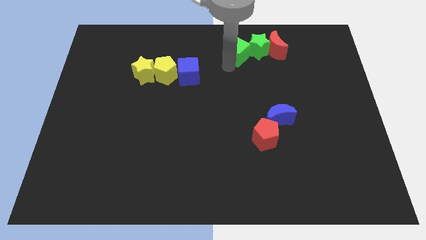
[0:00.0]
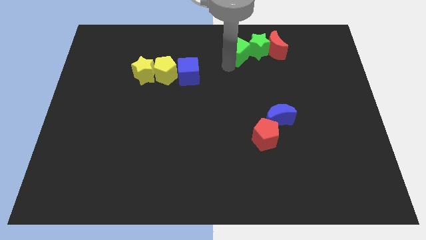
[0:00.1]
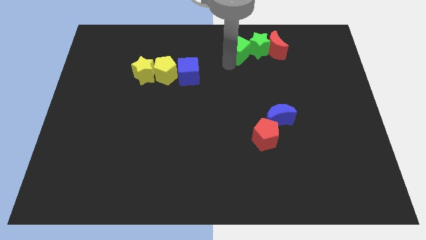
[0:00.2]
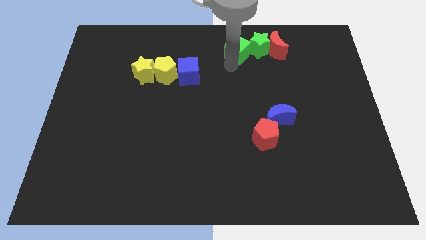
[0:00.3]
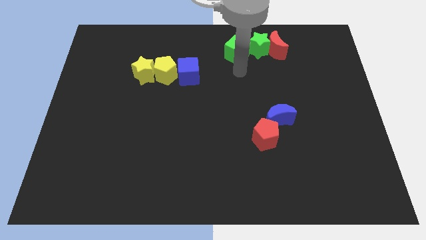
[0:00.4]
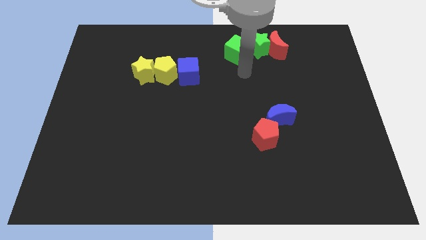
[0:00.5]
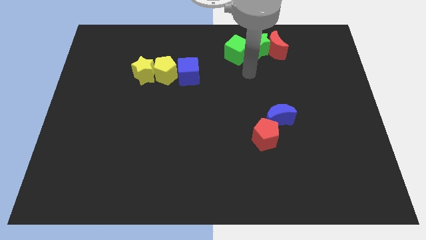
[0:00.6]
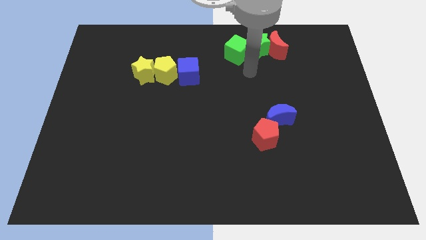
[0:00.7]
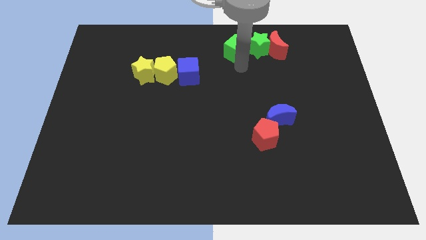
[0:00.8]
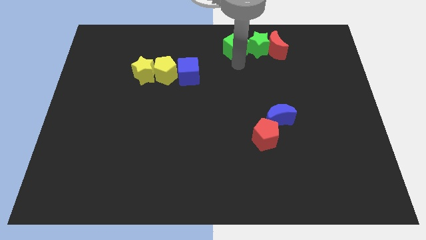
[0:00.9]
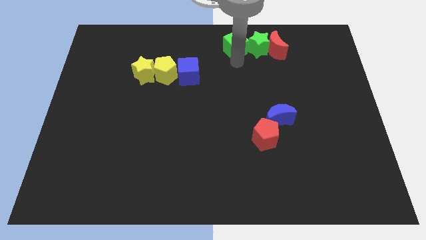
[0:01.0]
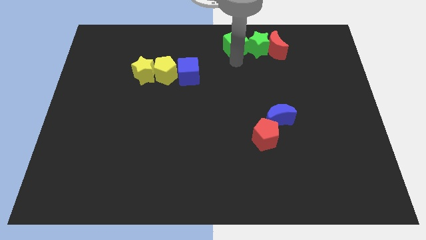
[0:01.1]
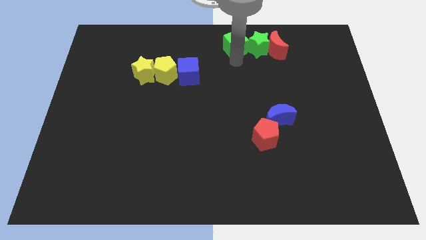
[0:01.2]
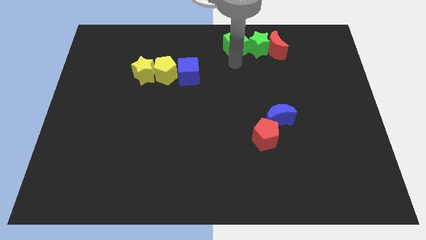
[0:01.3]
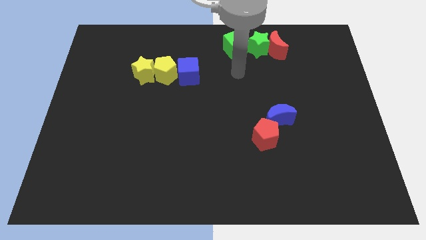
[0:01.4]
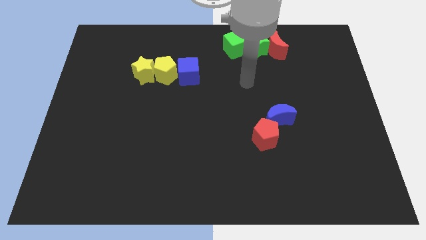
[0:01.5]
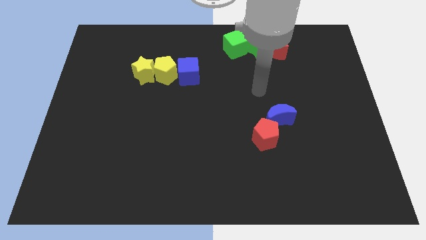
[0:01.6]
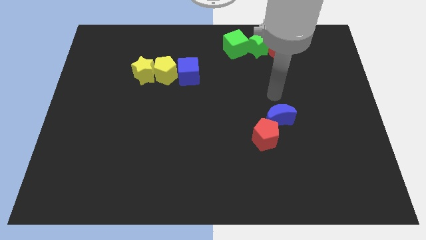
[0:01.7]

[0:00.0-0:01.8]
push the green cube into the green star

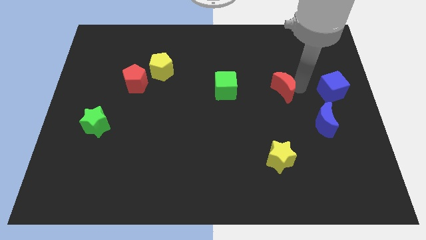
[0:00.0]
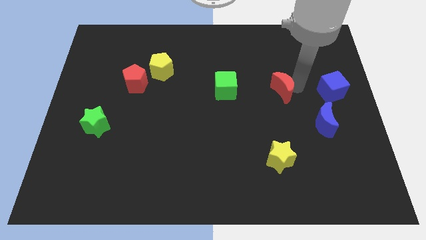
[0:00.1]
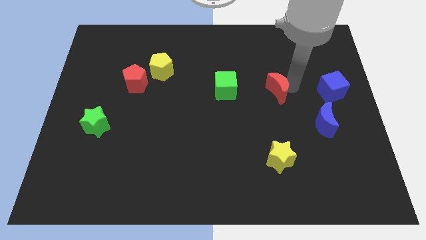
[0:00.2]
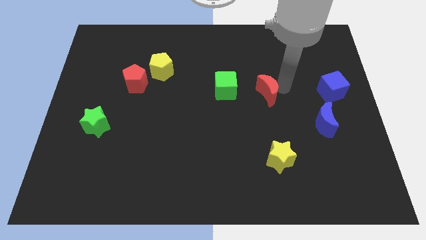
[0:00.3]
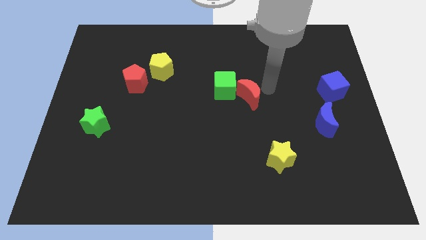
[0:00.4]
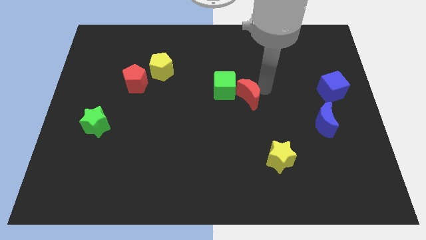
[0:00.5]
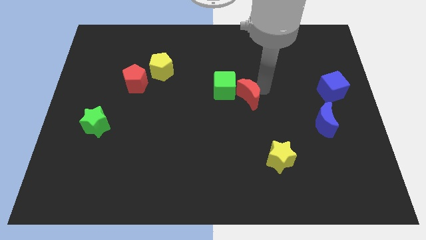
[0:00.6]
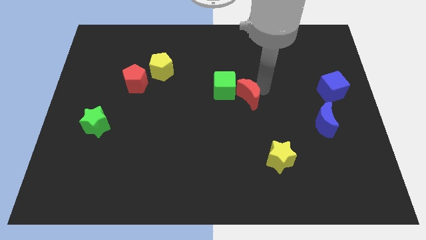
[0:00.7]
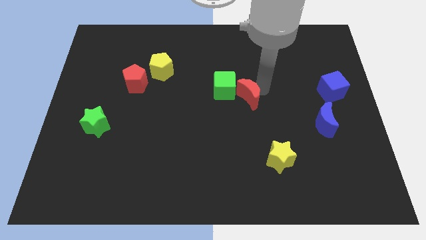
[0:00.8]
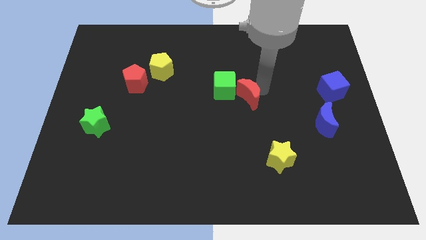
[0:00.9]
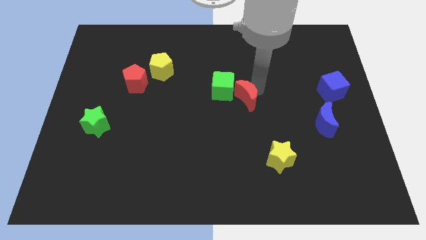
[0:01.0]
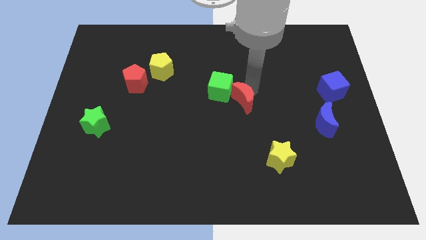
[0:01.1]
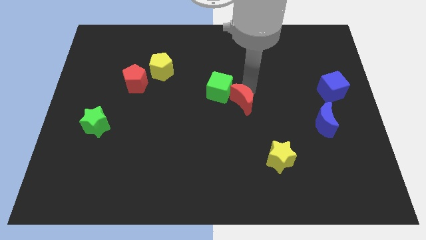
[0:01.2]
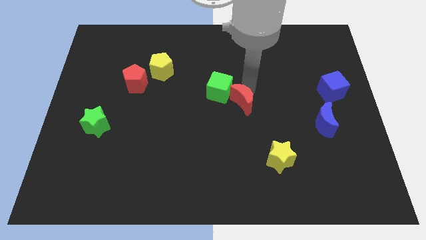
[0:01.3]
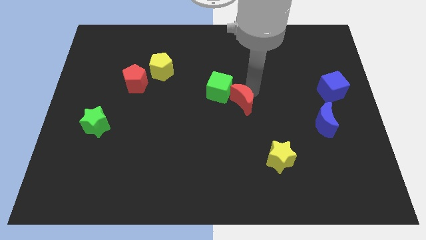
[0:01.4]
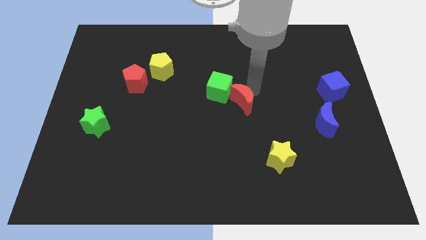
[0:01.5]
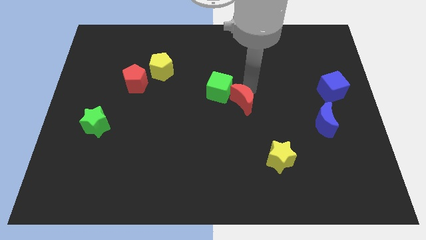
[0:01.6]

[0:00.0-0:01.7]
move the red crescent to the right side of the green cube

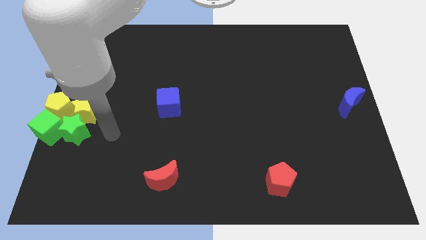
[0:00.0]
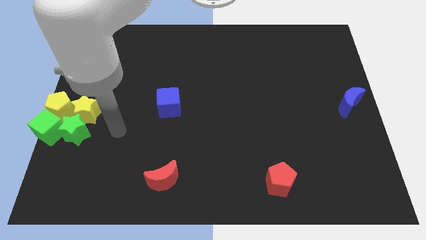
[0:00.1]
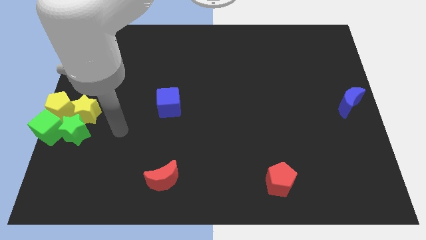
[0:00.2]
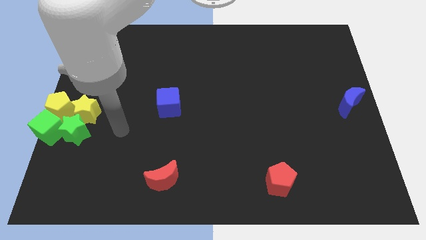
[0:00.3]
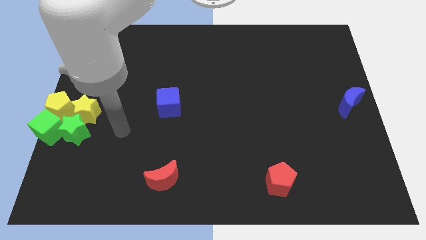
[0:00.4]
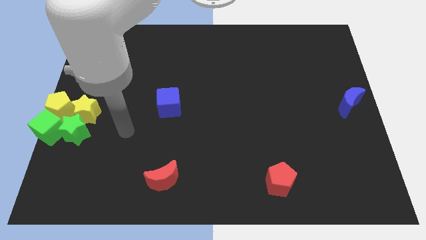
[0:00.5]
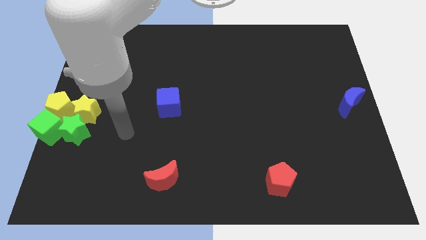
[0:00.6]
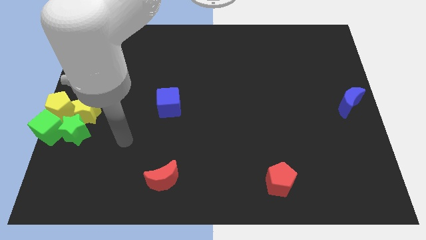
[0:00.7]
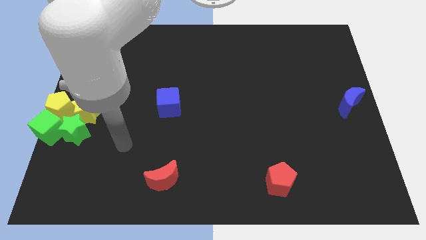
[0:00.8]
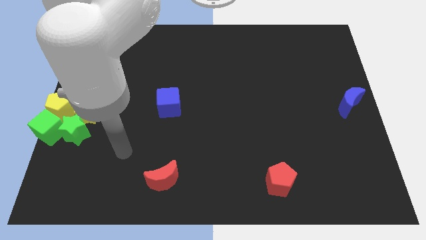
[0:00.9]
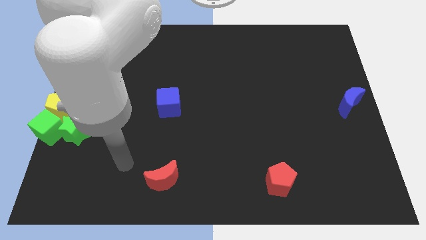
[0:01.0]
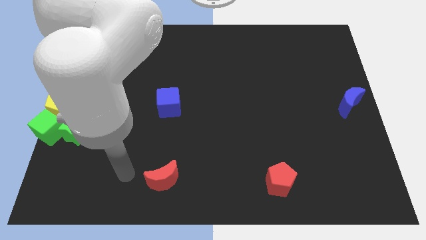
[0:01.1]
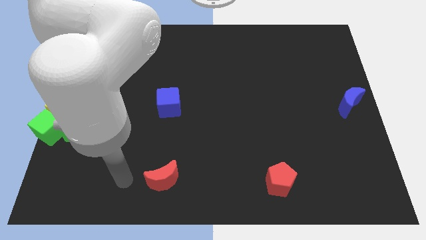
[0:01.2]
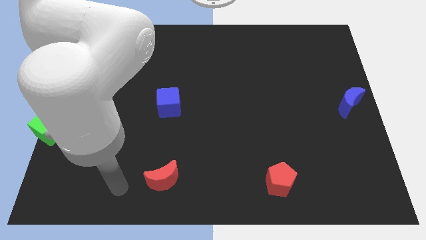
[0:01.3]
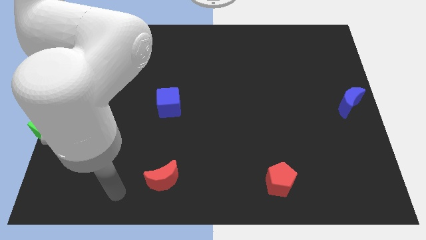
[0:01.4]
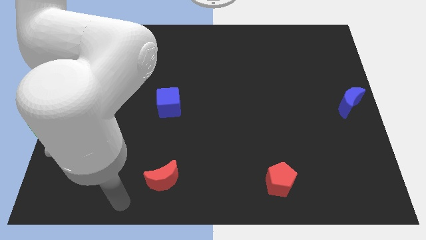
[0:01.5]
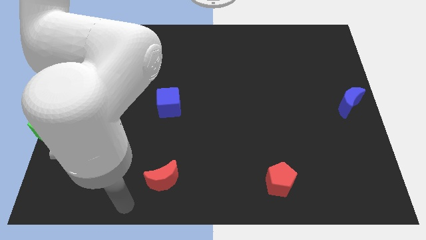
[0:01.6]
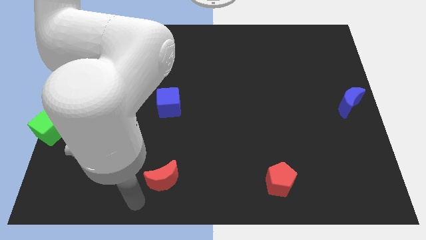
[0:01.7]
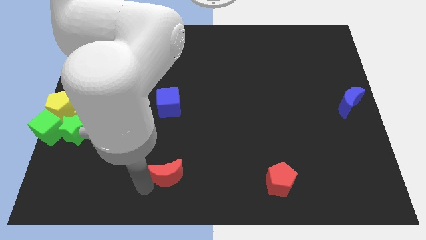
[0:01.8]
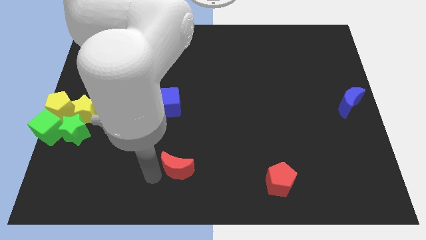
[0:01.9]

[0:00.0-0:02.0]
move your arm towards the bottom left side of the red moon

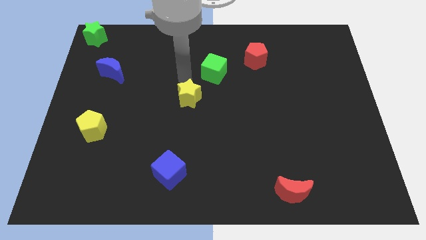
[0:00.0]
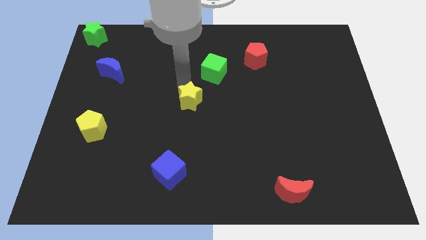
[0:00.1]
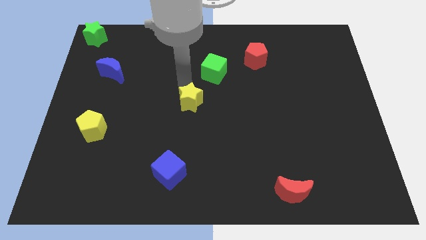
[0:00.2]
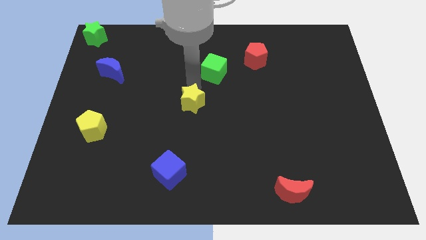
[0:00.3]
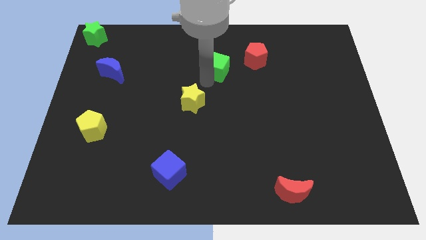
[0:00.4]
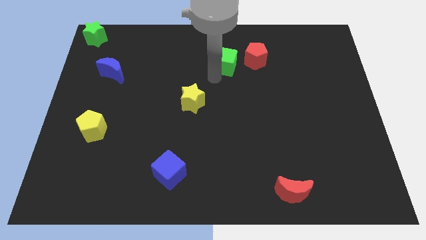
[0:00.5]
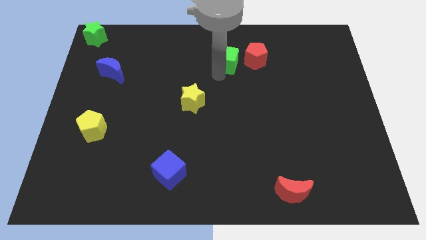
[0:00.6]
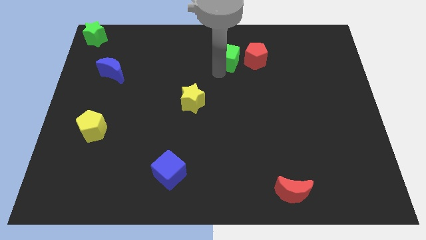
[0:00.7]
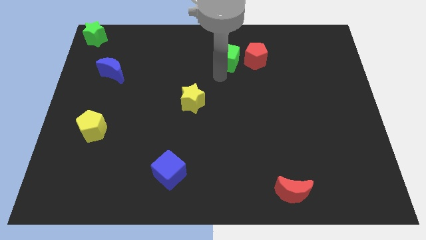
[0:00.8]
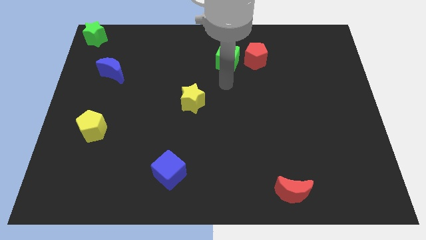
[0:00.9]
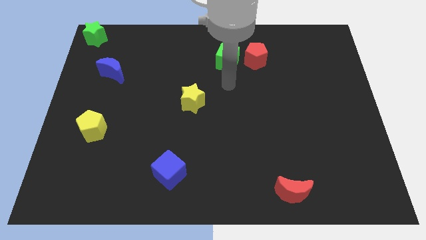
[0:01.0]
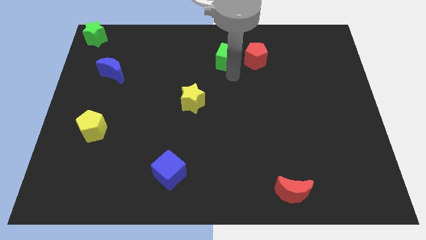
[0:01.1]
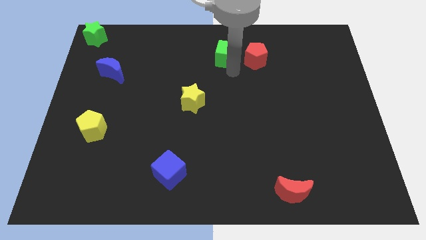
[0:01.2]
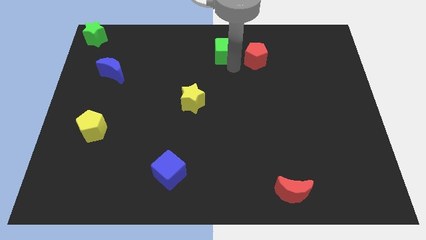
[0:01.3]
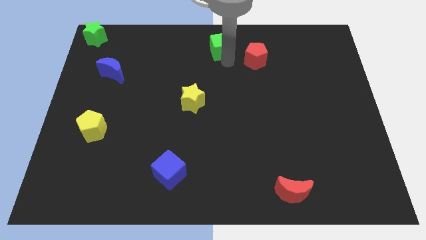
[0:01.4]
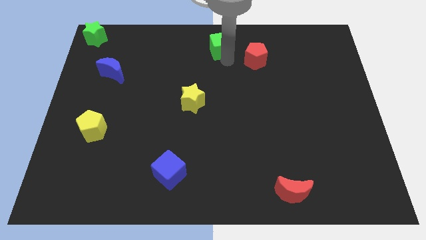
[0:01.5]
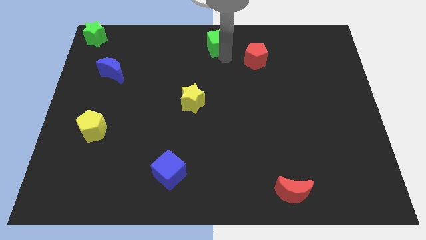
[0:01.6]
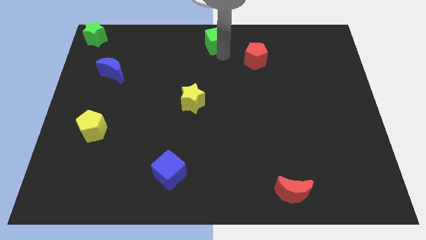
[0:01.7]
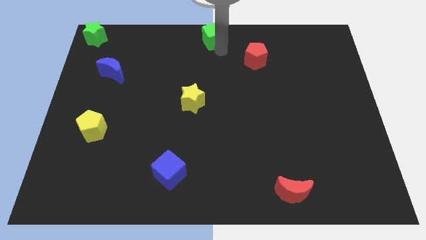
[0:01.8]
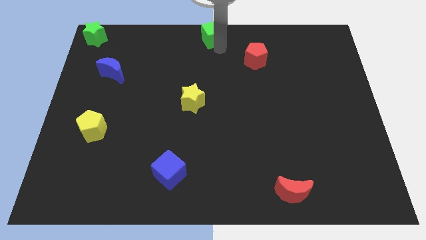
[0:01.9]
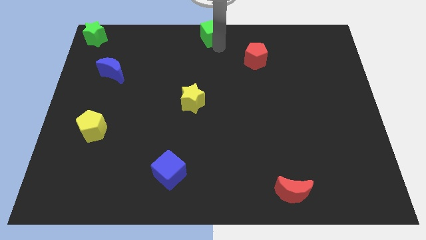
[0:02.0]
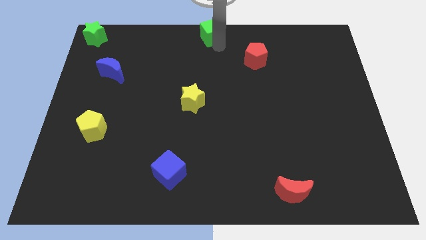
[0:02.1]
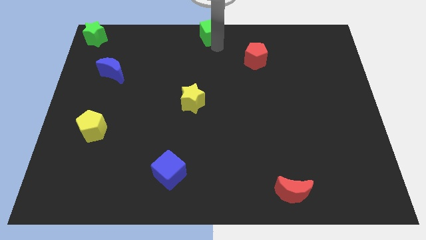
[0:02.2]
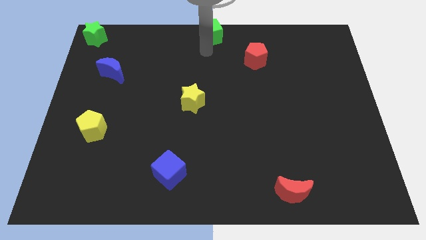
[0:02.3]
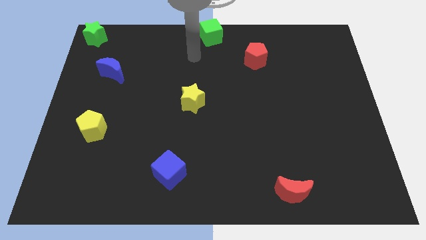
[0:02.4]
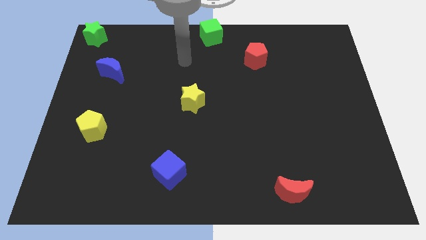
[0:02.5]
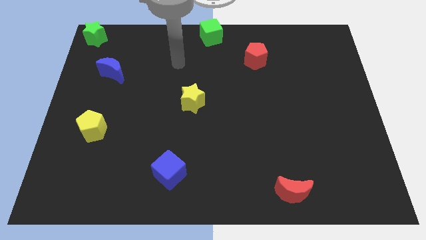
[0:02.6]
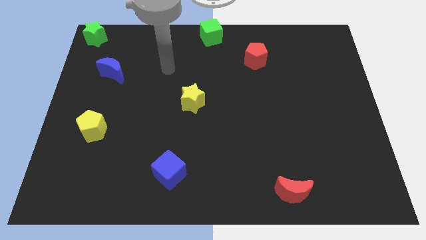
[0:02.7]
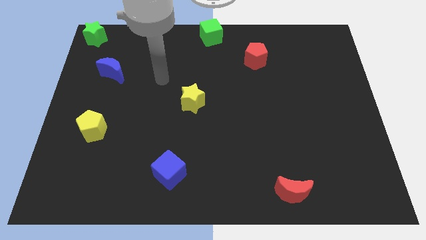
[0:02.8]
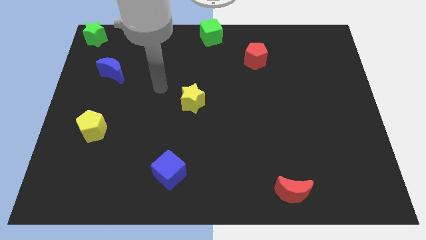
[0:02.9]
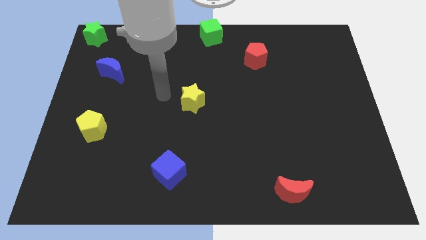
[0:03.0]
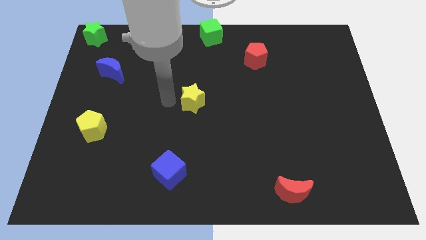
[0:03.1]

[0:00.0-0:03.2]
place the green cube at the top center

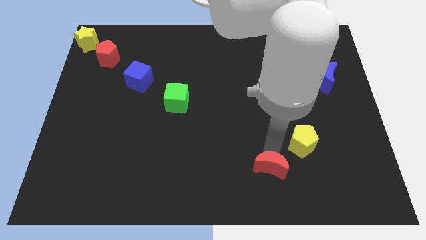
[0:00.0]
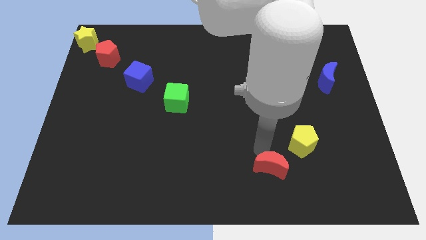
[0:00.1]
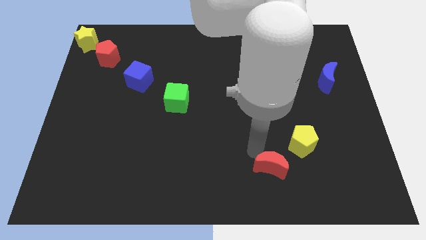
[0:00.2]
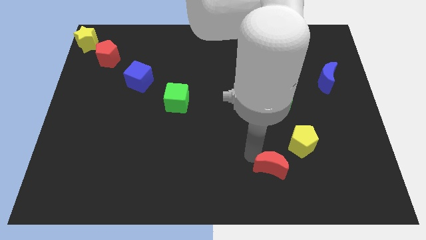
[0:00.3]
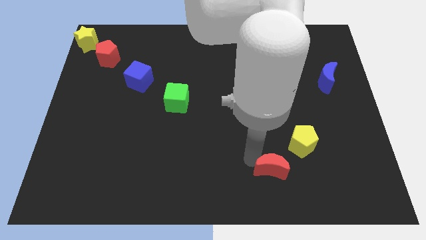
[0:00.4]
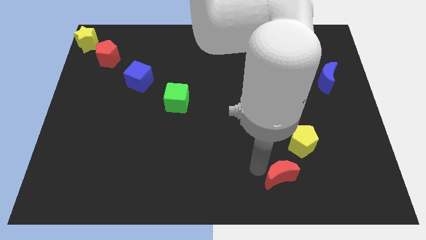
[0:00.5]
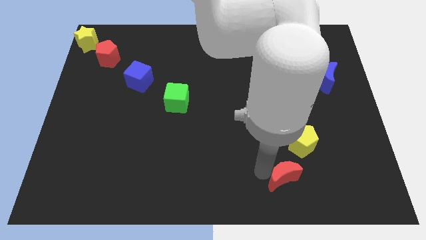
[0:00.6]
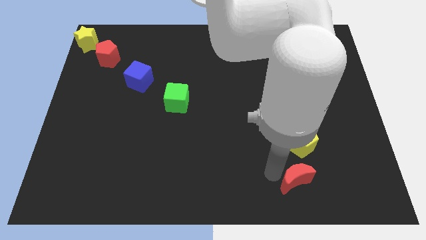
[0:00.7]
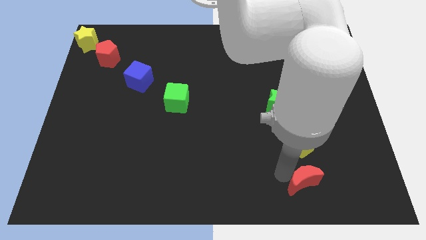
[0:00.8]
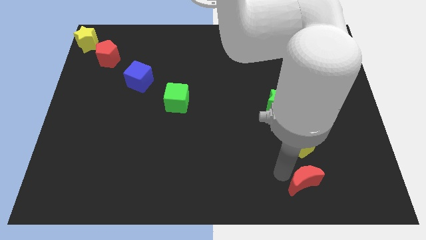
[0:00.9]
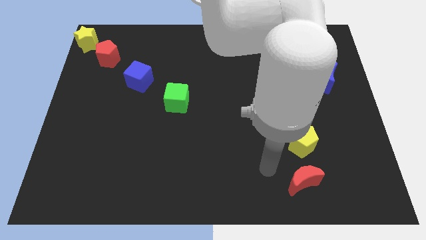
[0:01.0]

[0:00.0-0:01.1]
push the red crescent to the bottom of the yellow pentagon
